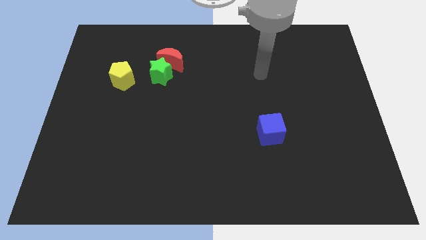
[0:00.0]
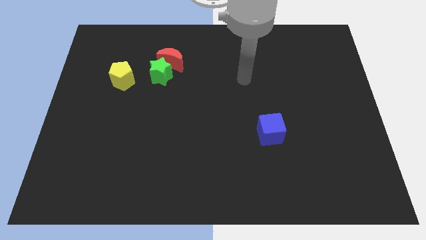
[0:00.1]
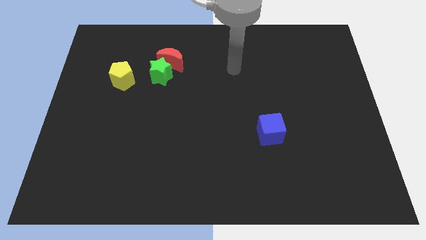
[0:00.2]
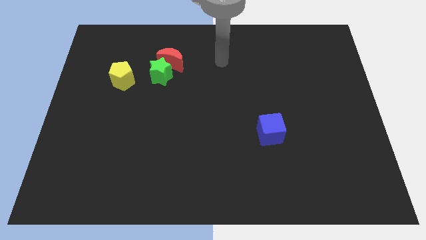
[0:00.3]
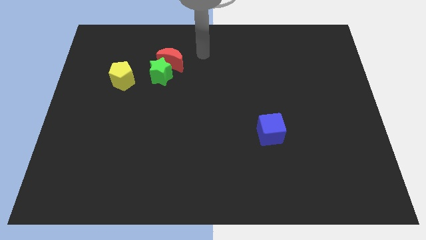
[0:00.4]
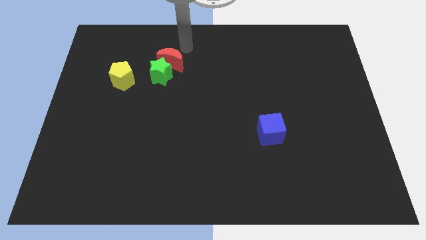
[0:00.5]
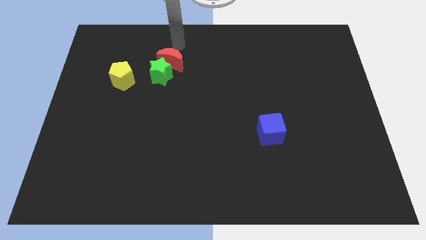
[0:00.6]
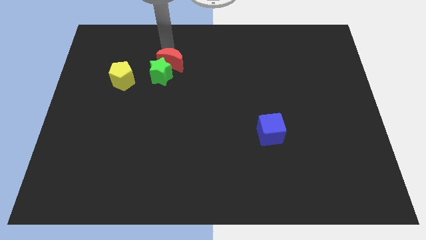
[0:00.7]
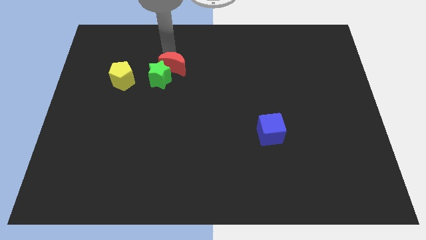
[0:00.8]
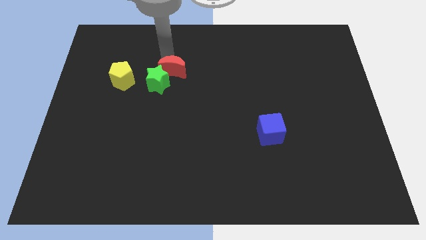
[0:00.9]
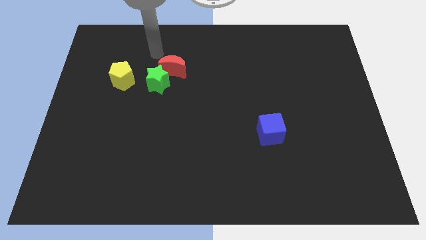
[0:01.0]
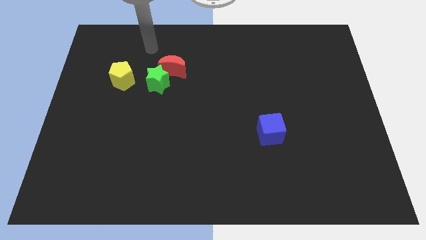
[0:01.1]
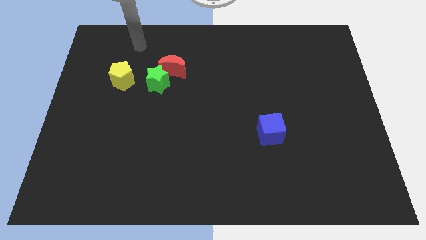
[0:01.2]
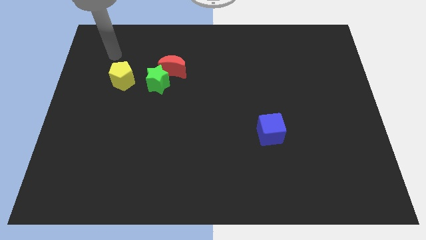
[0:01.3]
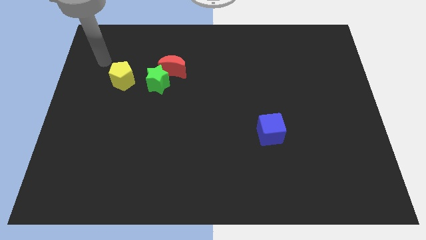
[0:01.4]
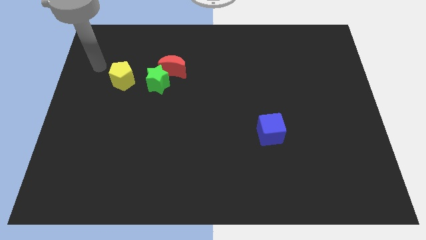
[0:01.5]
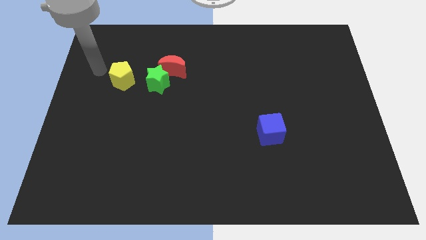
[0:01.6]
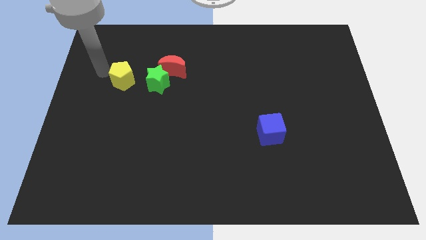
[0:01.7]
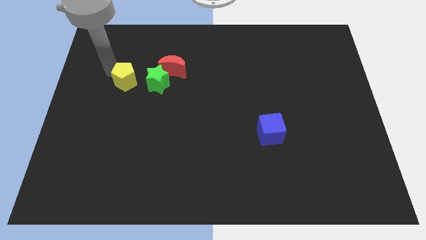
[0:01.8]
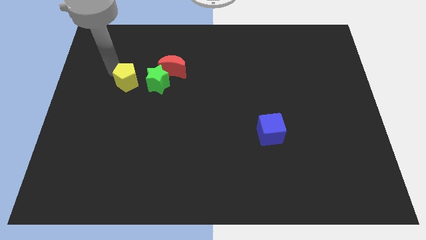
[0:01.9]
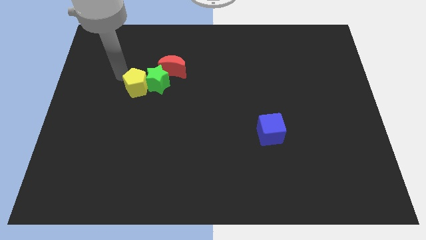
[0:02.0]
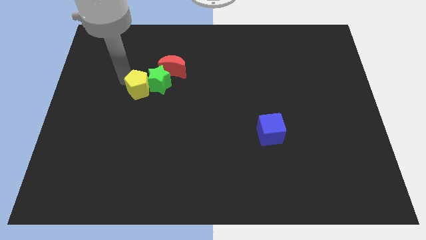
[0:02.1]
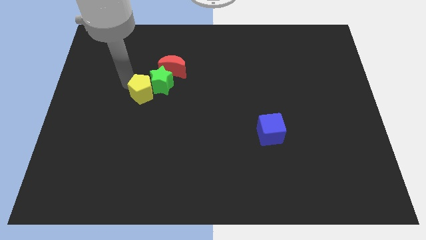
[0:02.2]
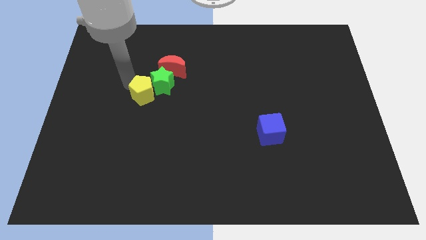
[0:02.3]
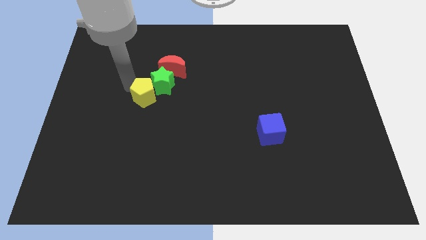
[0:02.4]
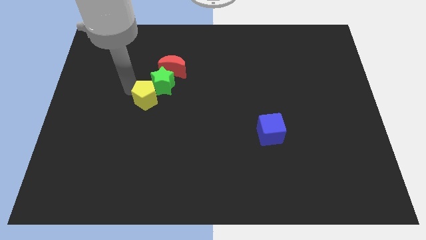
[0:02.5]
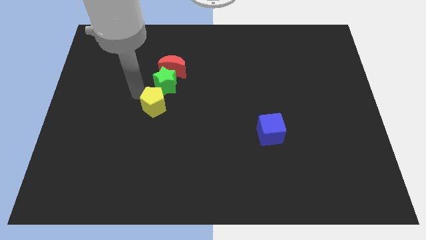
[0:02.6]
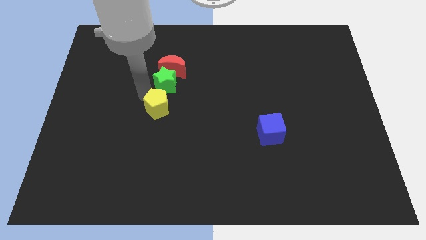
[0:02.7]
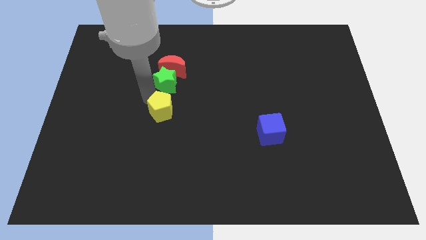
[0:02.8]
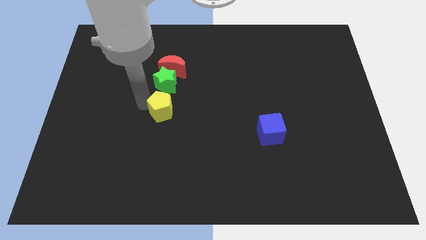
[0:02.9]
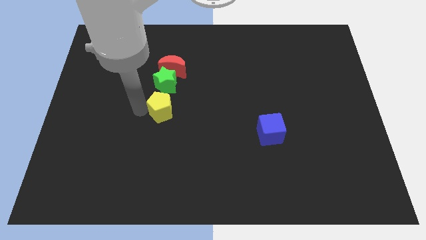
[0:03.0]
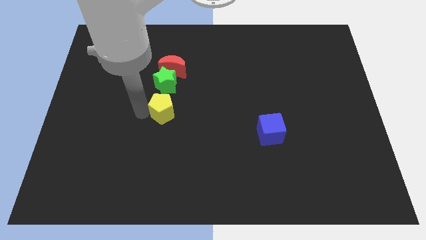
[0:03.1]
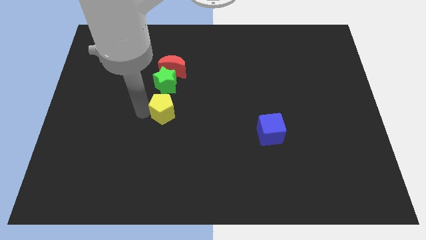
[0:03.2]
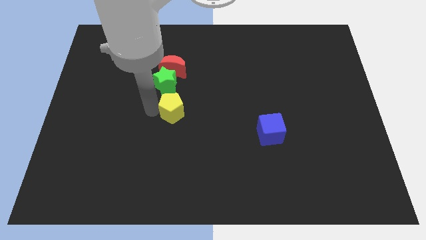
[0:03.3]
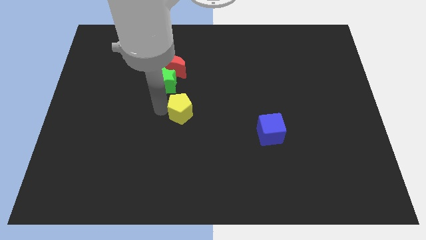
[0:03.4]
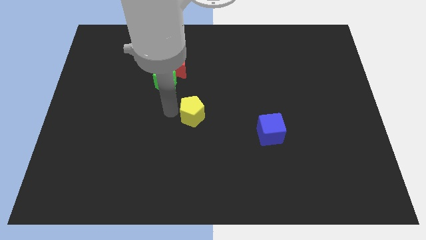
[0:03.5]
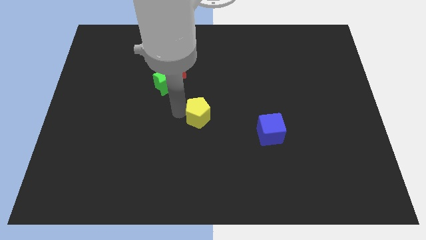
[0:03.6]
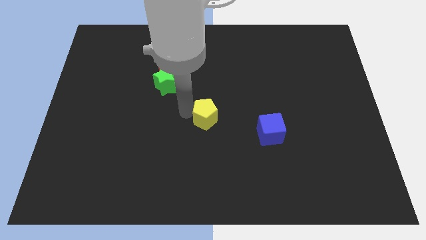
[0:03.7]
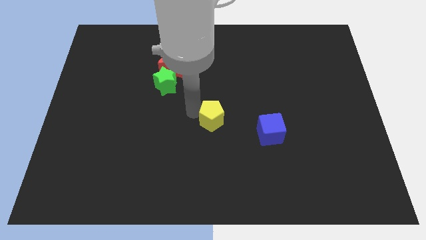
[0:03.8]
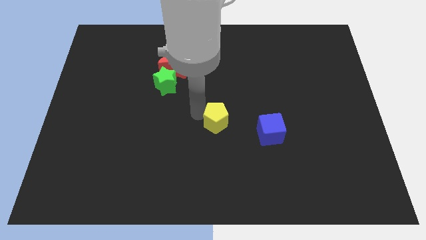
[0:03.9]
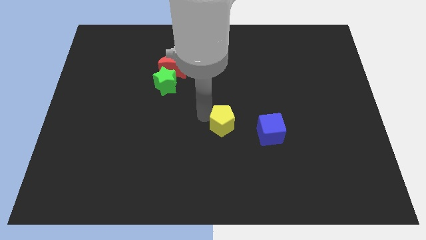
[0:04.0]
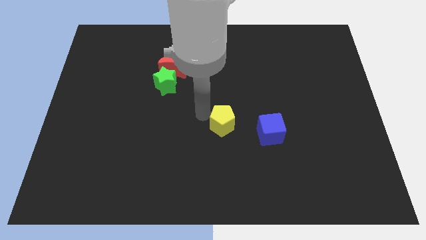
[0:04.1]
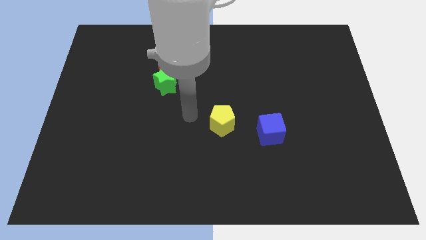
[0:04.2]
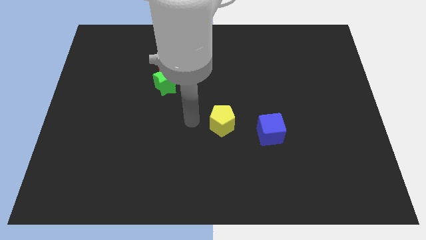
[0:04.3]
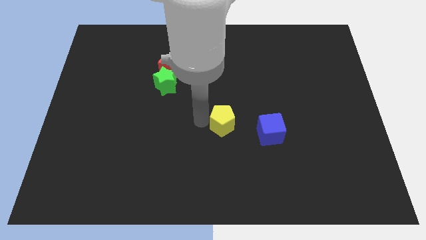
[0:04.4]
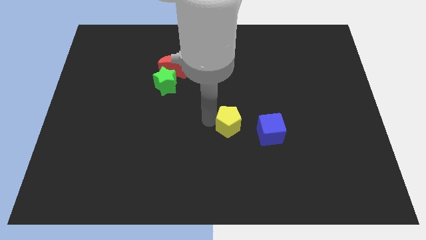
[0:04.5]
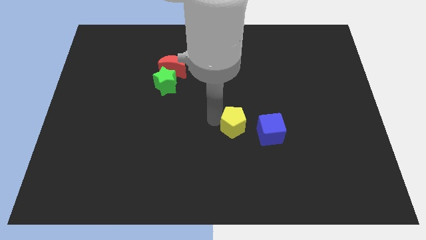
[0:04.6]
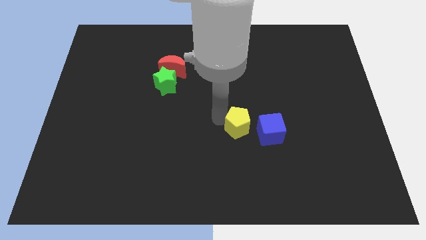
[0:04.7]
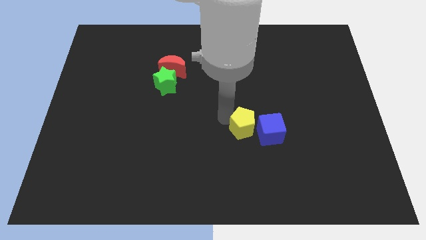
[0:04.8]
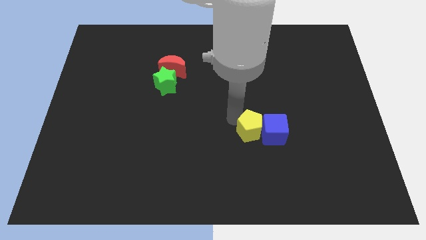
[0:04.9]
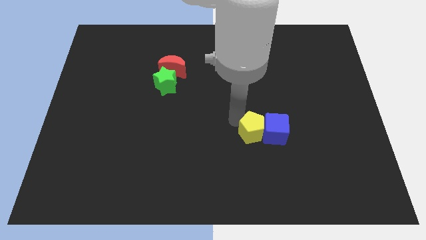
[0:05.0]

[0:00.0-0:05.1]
move the pentagon close to the blue block

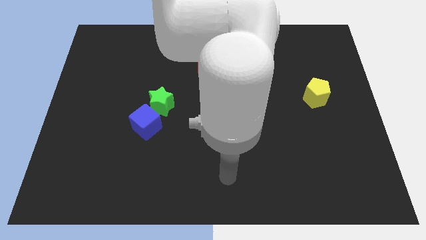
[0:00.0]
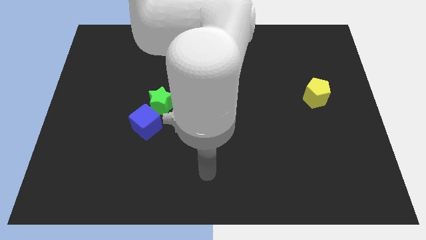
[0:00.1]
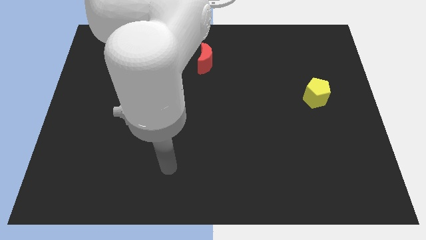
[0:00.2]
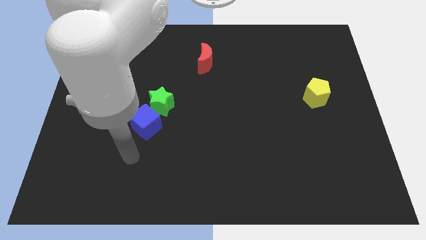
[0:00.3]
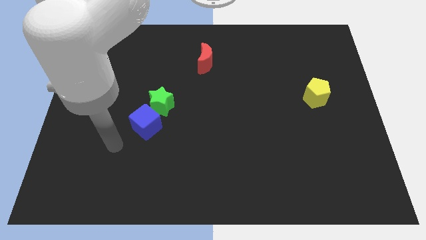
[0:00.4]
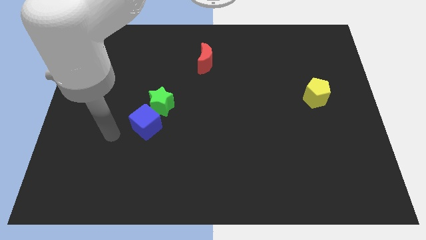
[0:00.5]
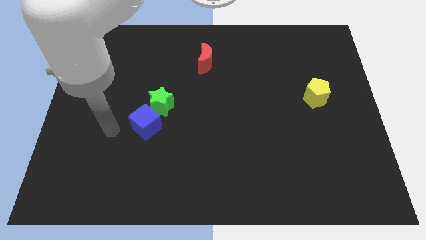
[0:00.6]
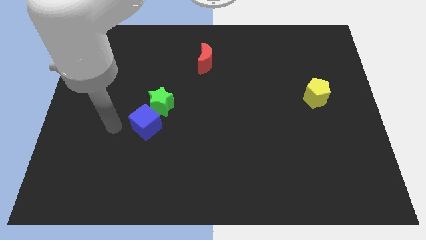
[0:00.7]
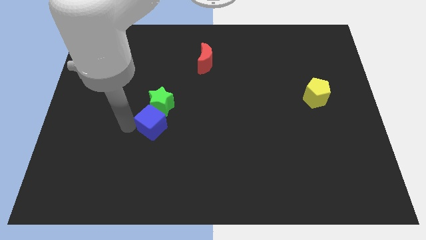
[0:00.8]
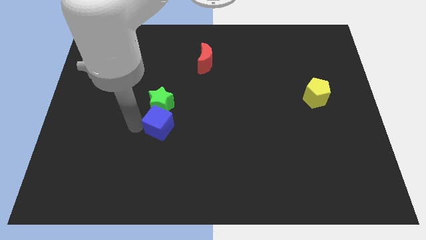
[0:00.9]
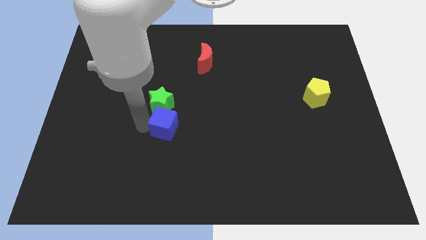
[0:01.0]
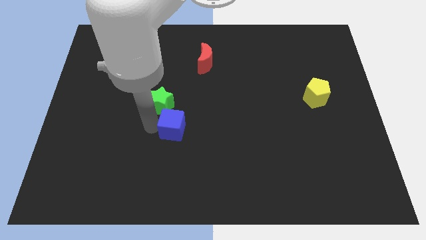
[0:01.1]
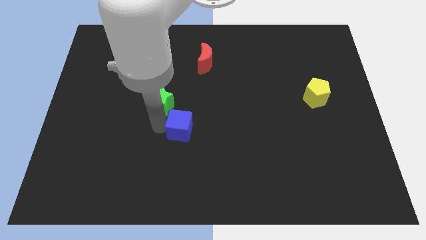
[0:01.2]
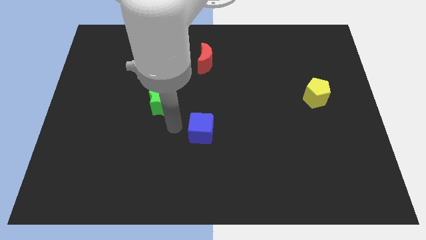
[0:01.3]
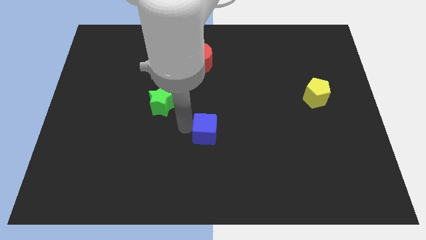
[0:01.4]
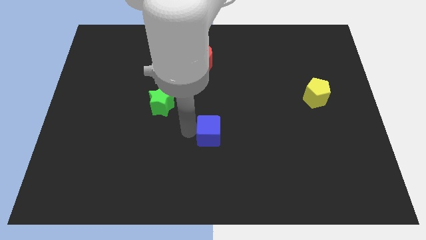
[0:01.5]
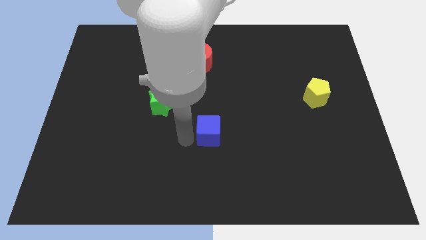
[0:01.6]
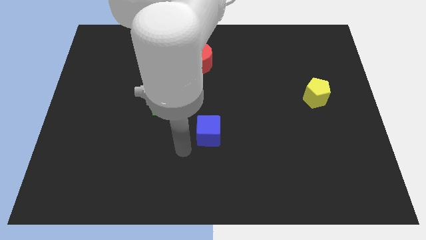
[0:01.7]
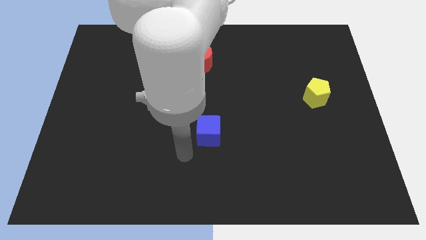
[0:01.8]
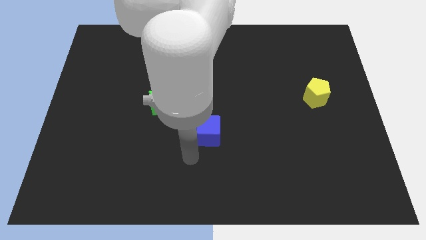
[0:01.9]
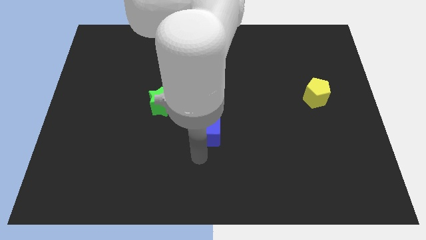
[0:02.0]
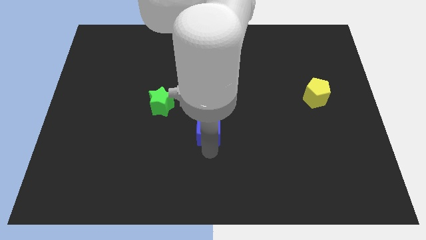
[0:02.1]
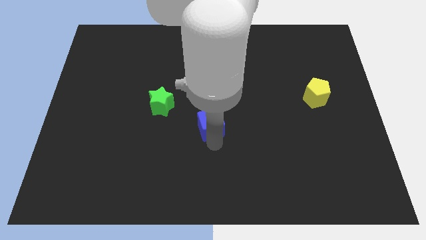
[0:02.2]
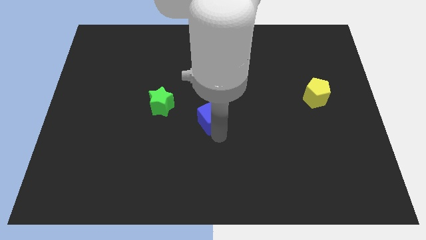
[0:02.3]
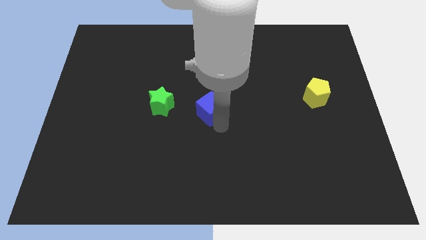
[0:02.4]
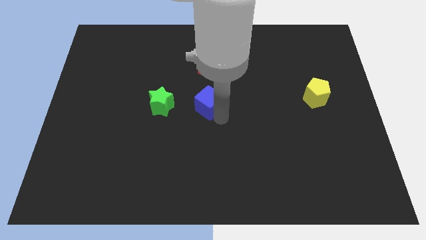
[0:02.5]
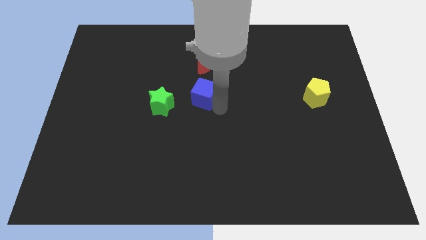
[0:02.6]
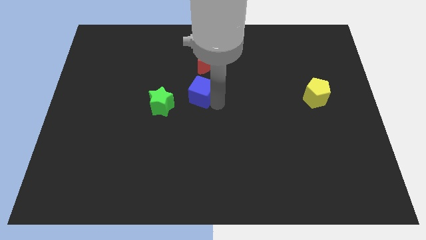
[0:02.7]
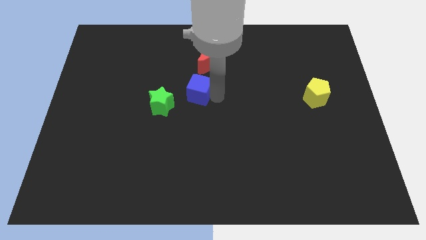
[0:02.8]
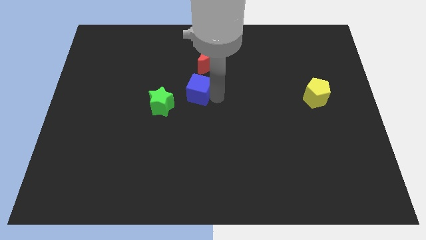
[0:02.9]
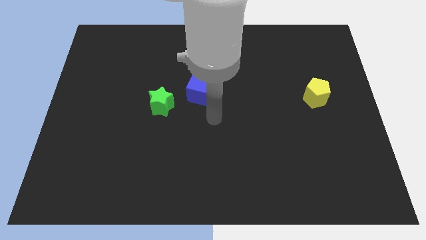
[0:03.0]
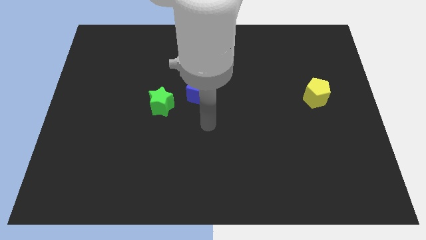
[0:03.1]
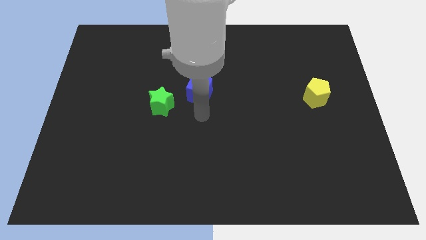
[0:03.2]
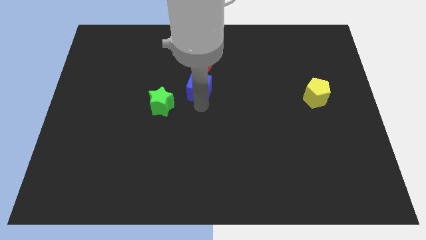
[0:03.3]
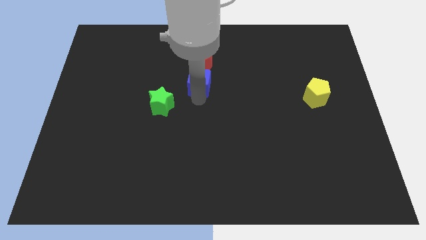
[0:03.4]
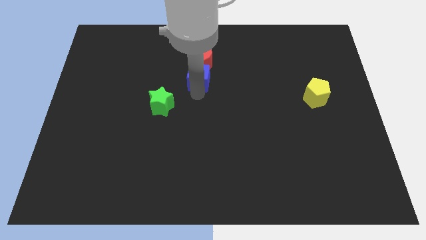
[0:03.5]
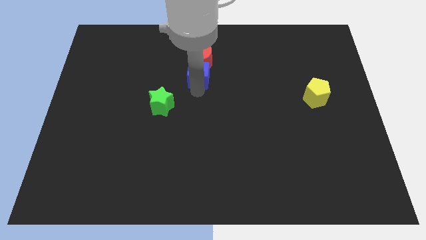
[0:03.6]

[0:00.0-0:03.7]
move the blue block towards the red moon
